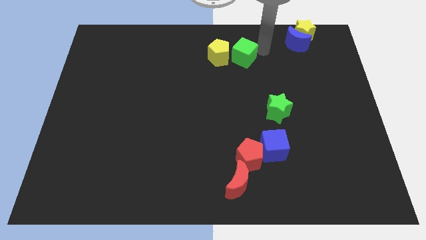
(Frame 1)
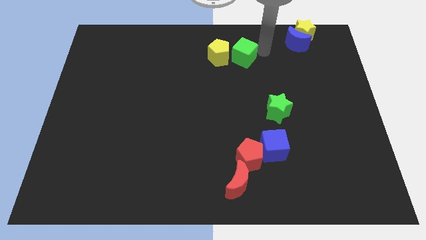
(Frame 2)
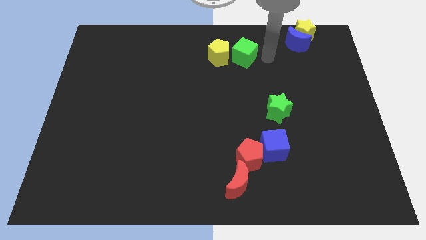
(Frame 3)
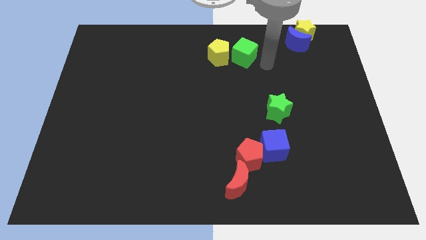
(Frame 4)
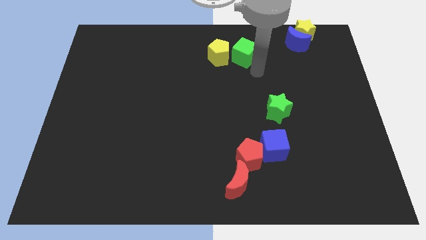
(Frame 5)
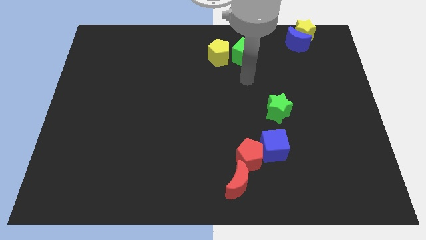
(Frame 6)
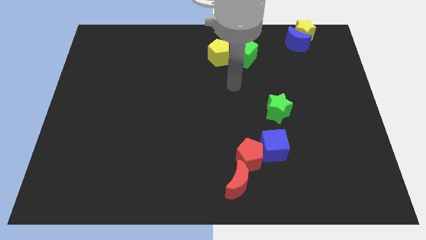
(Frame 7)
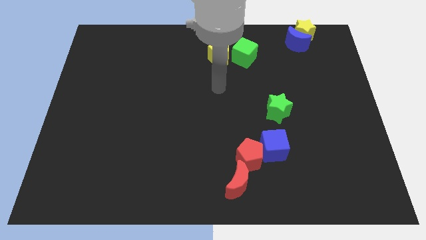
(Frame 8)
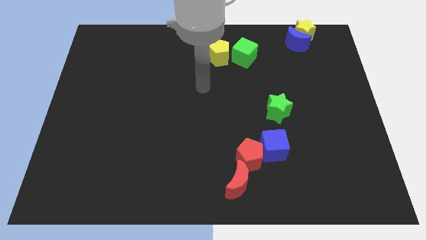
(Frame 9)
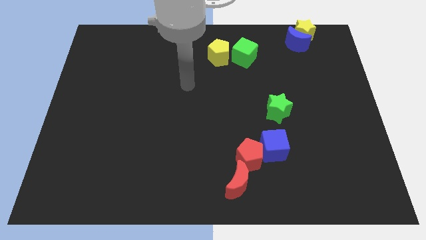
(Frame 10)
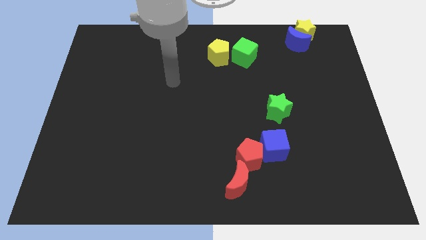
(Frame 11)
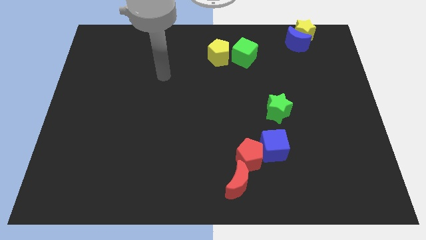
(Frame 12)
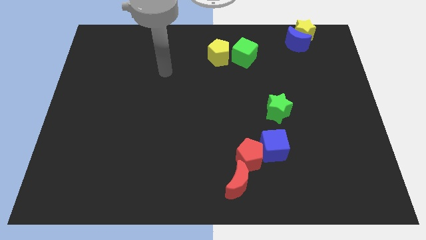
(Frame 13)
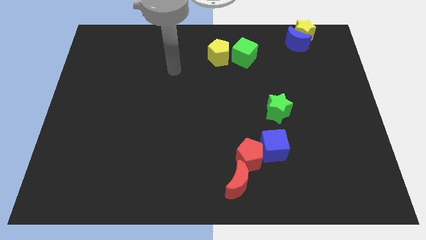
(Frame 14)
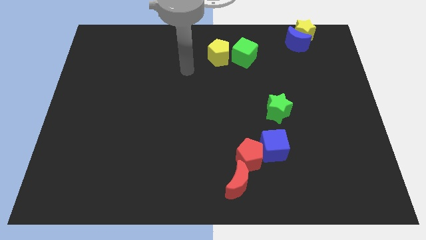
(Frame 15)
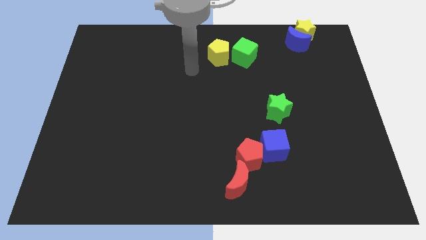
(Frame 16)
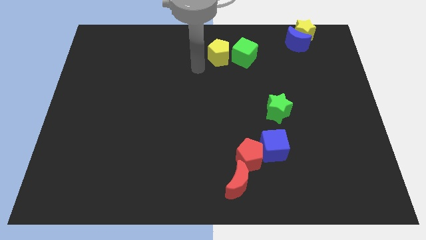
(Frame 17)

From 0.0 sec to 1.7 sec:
move your arm towards the yellow pentagon

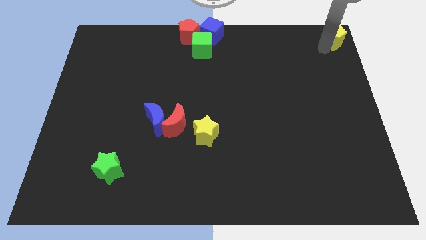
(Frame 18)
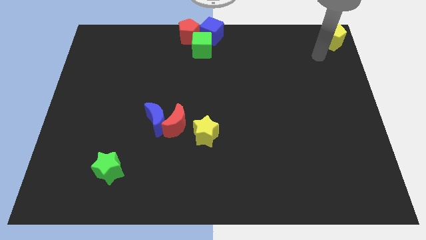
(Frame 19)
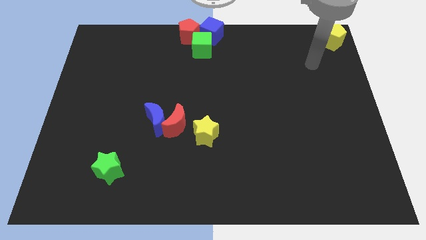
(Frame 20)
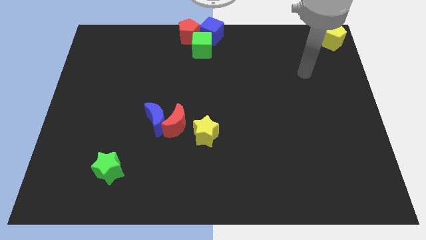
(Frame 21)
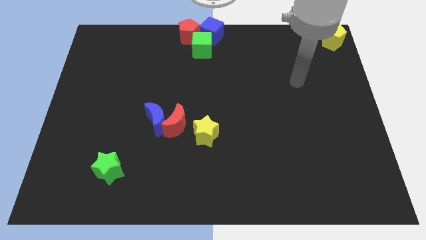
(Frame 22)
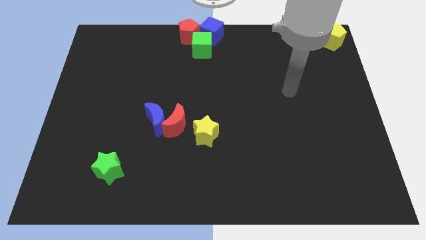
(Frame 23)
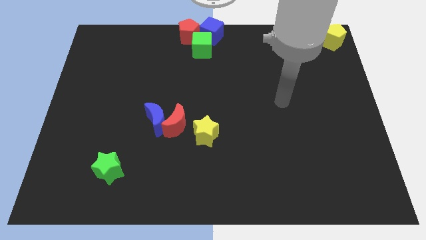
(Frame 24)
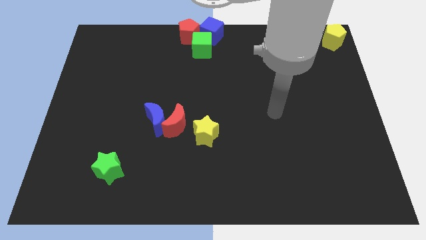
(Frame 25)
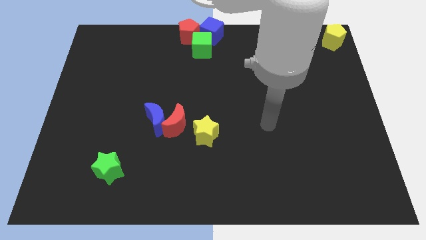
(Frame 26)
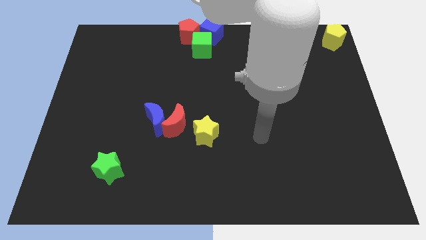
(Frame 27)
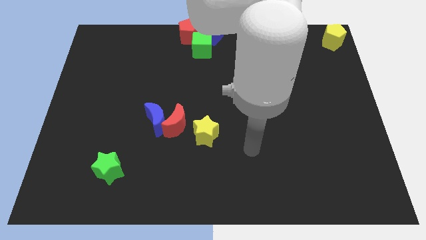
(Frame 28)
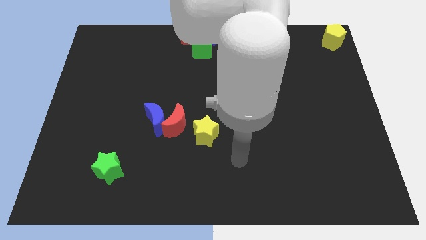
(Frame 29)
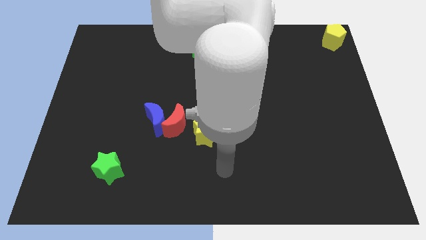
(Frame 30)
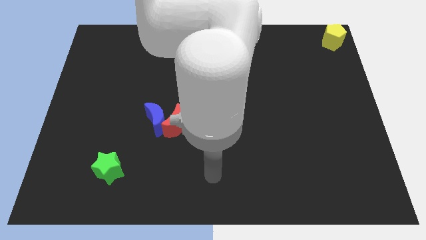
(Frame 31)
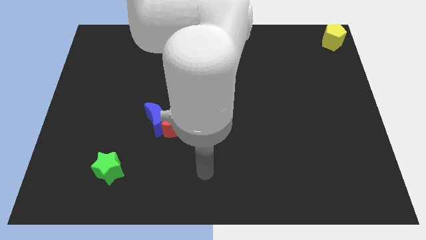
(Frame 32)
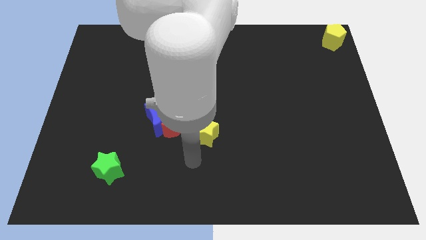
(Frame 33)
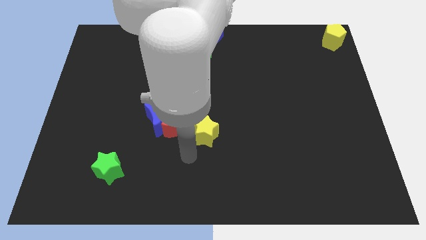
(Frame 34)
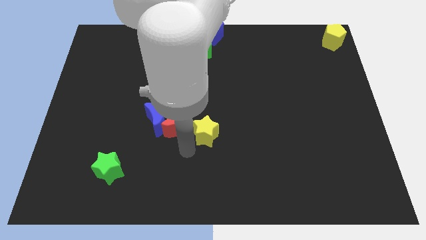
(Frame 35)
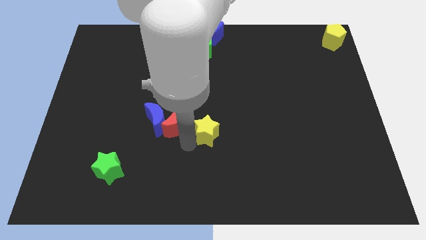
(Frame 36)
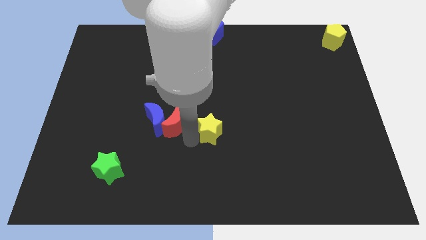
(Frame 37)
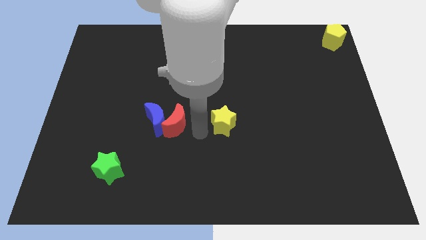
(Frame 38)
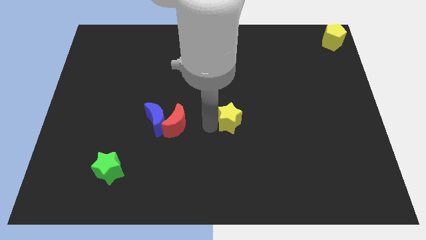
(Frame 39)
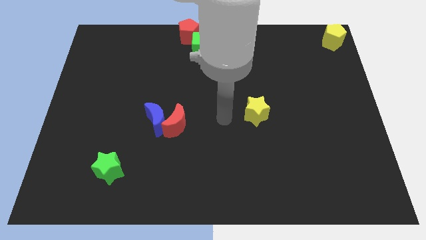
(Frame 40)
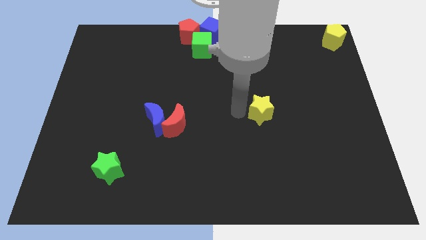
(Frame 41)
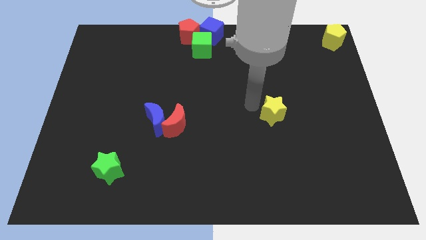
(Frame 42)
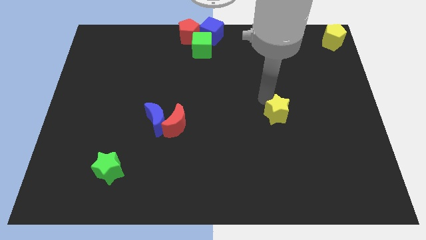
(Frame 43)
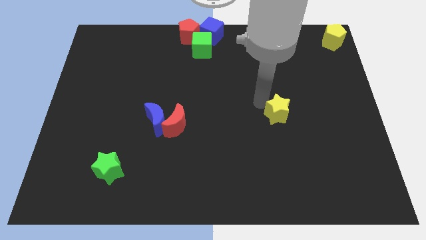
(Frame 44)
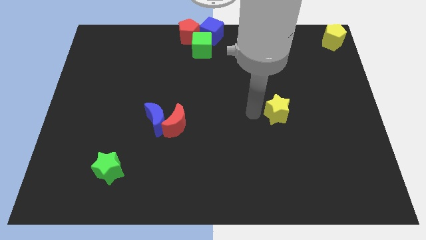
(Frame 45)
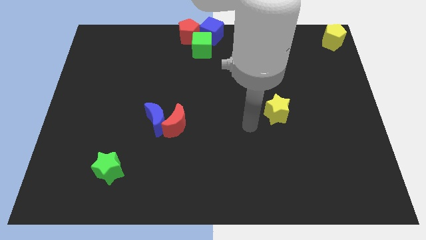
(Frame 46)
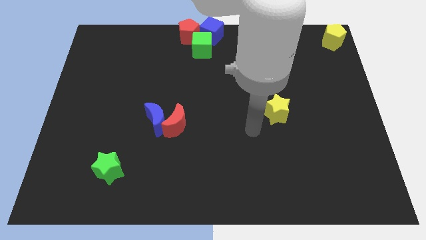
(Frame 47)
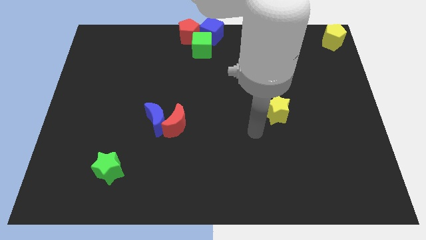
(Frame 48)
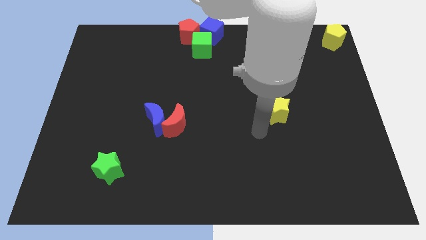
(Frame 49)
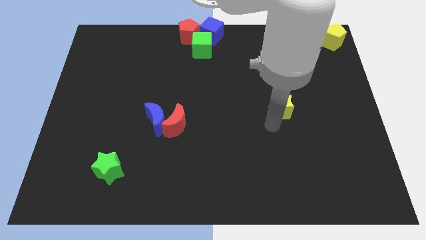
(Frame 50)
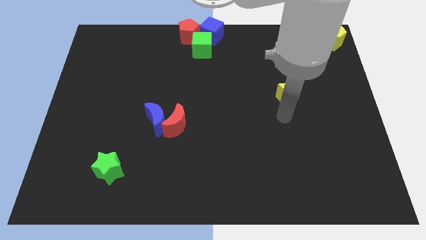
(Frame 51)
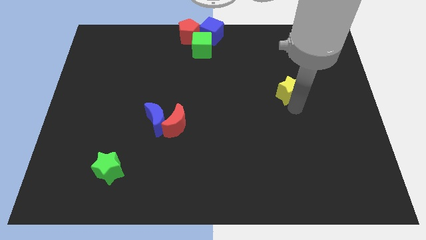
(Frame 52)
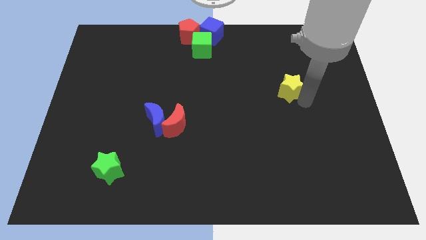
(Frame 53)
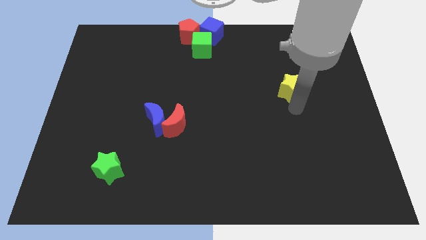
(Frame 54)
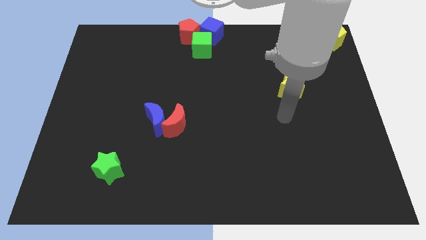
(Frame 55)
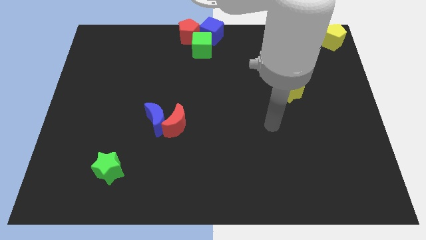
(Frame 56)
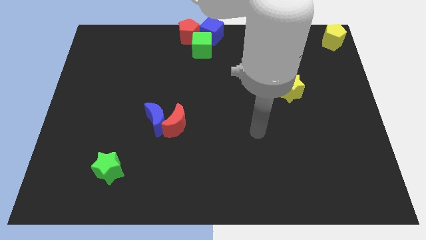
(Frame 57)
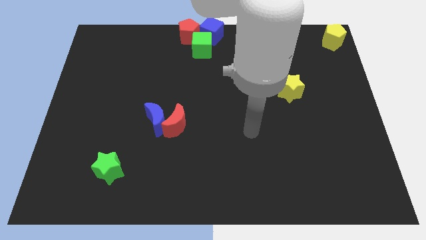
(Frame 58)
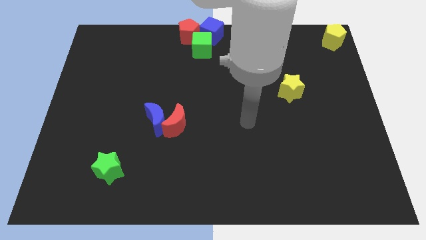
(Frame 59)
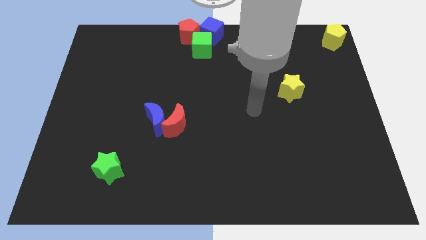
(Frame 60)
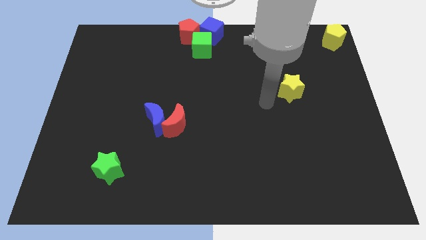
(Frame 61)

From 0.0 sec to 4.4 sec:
move the yellow star diagonally top right to red moon

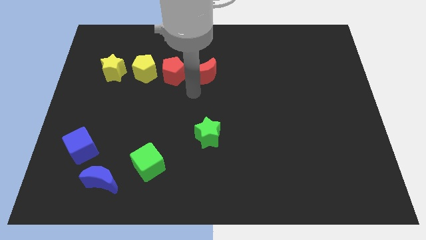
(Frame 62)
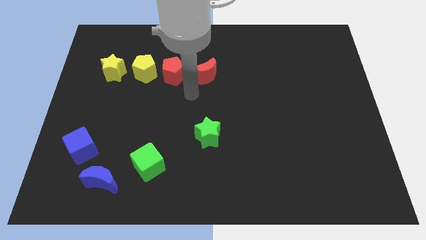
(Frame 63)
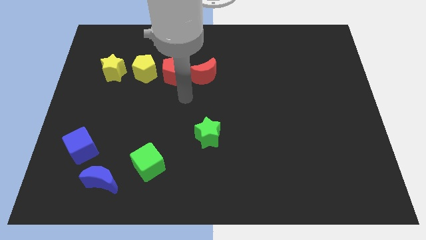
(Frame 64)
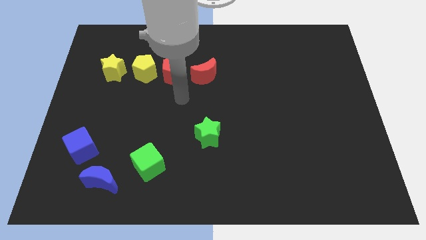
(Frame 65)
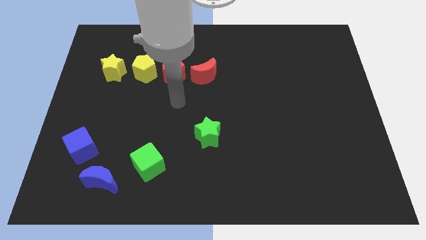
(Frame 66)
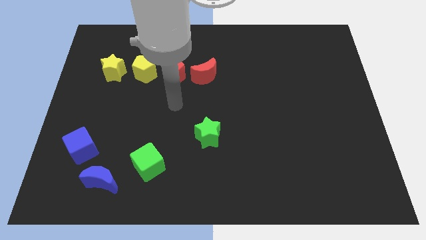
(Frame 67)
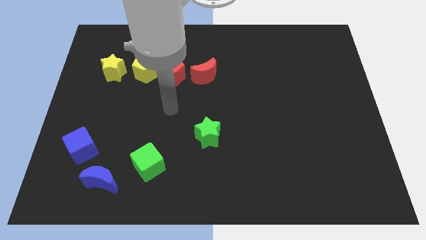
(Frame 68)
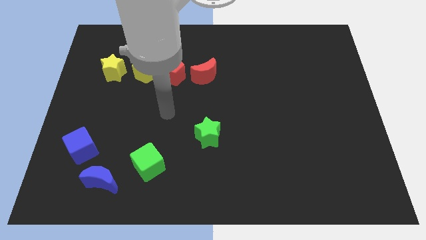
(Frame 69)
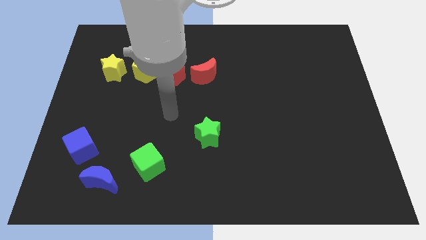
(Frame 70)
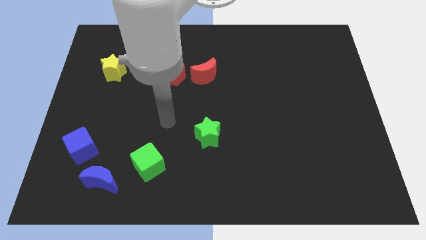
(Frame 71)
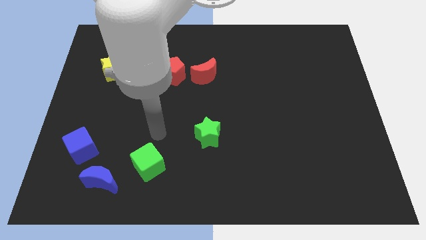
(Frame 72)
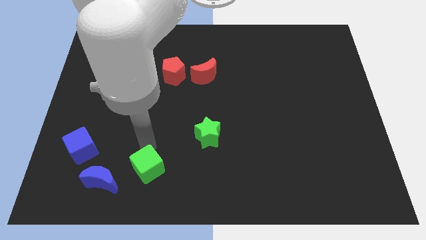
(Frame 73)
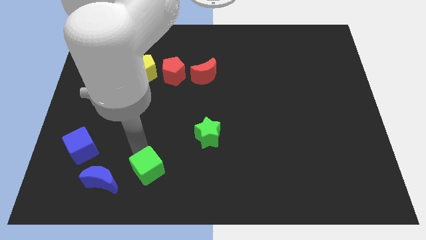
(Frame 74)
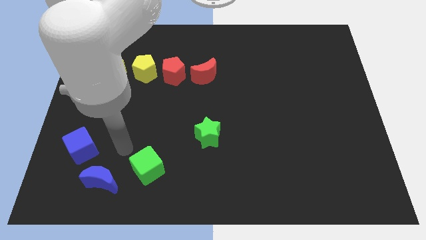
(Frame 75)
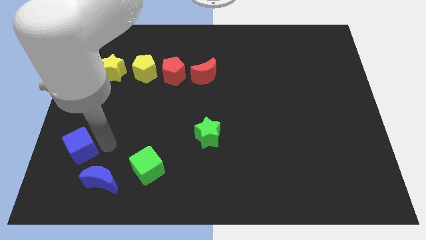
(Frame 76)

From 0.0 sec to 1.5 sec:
move your arm away from the red moon

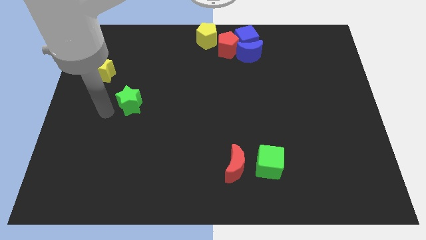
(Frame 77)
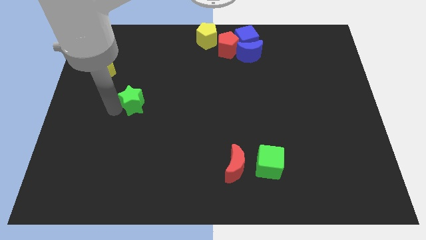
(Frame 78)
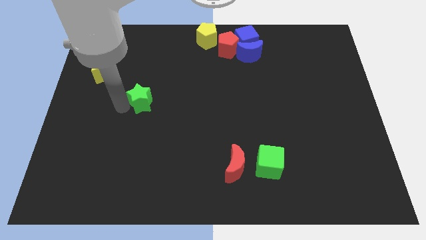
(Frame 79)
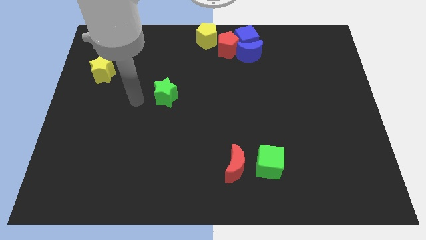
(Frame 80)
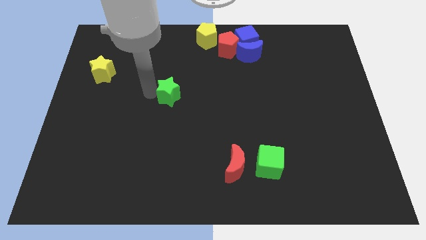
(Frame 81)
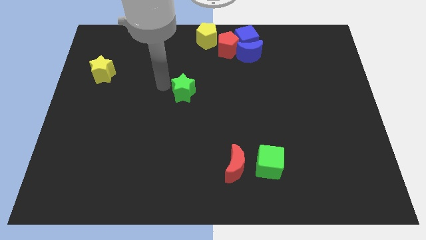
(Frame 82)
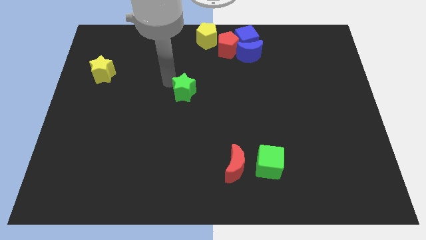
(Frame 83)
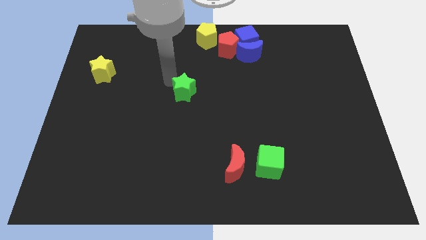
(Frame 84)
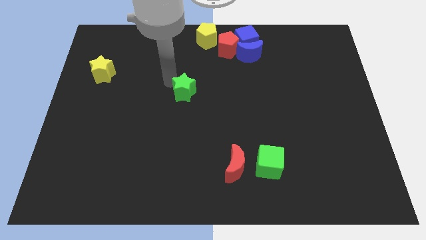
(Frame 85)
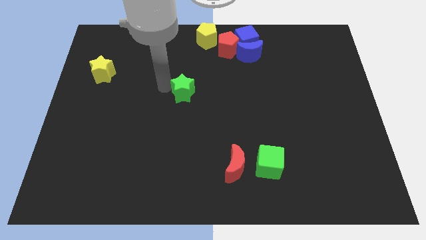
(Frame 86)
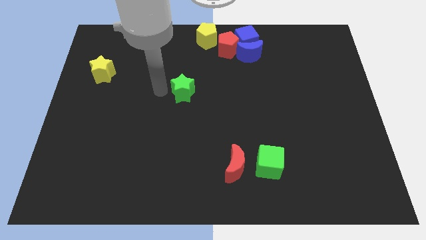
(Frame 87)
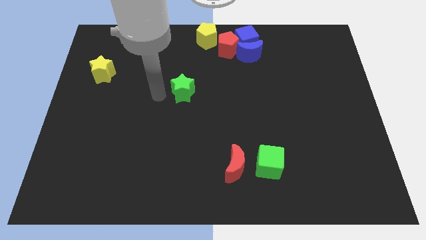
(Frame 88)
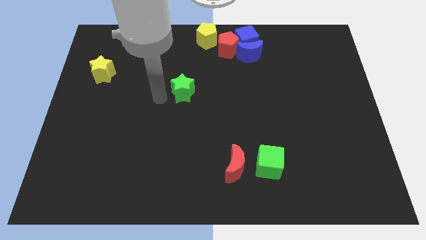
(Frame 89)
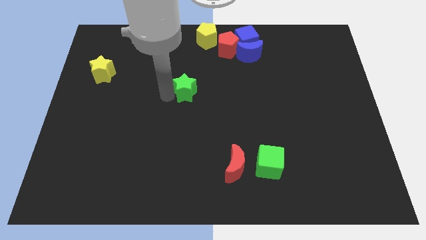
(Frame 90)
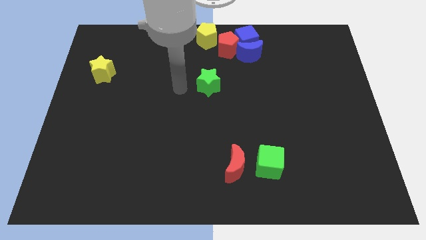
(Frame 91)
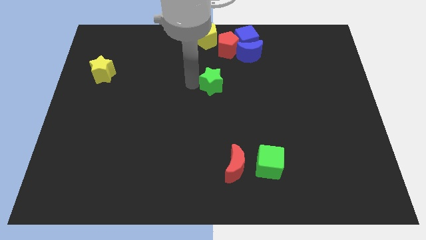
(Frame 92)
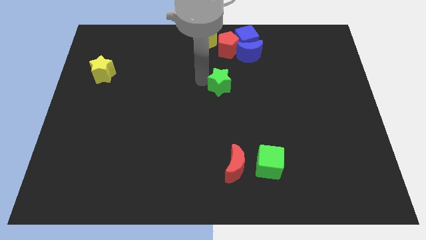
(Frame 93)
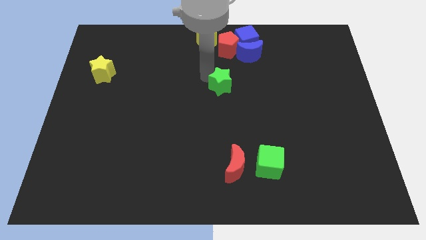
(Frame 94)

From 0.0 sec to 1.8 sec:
move the green star to the center
